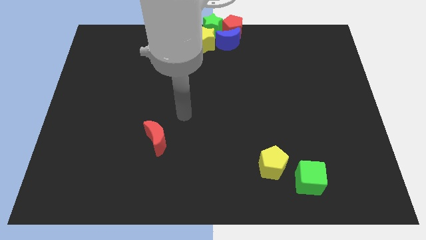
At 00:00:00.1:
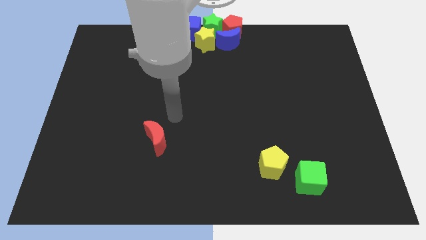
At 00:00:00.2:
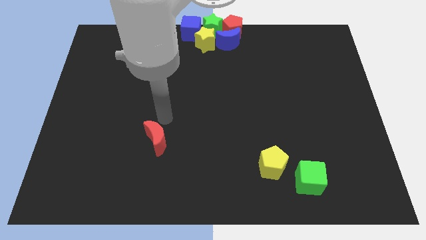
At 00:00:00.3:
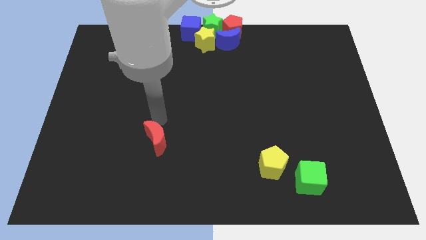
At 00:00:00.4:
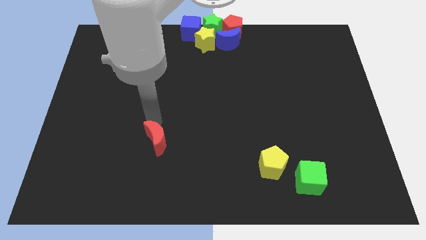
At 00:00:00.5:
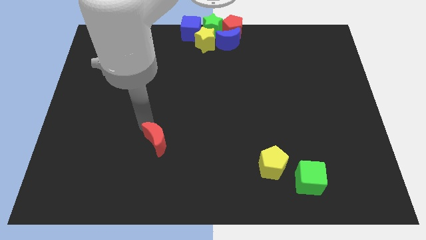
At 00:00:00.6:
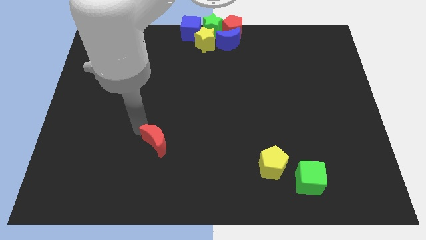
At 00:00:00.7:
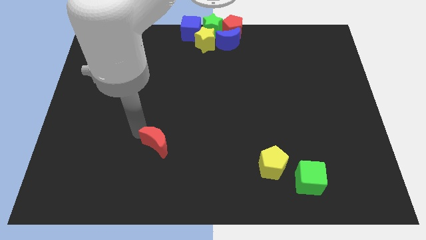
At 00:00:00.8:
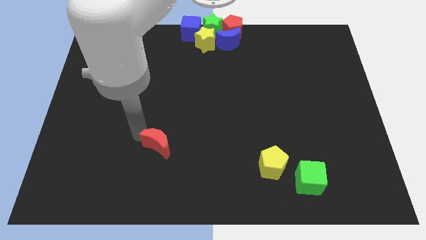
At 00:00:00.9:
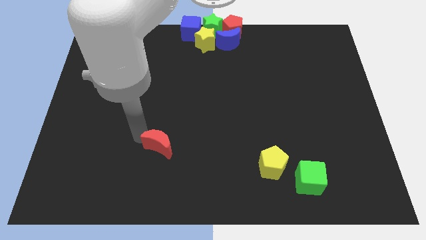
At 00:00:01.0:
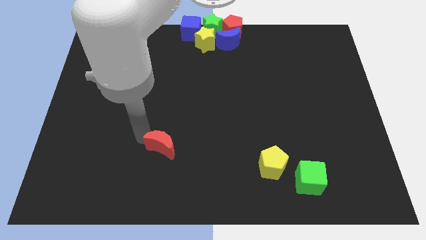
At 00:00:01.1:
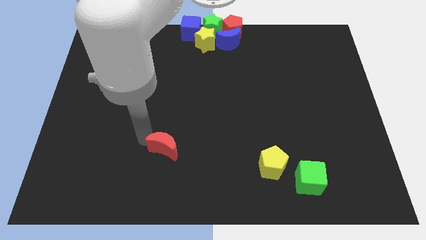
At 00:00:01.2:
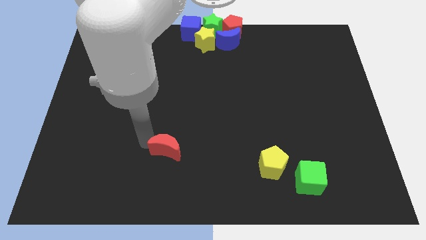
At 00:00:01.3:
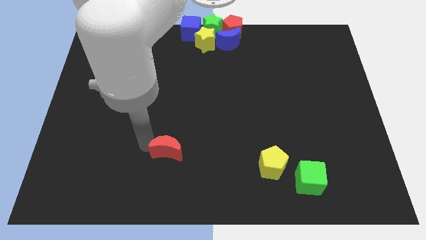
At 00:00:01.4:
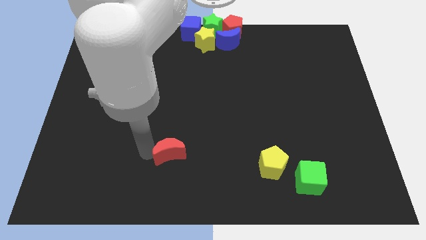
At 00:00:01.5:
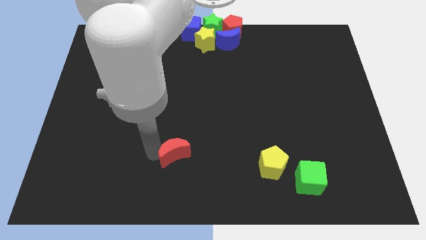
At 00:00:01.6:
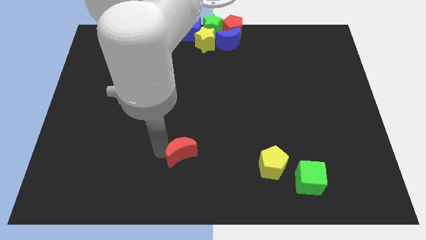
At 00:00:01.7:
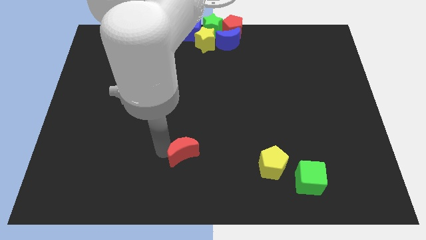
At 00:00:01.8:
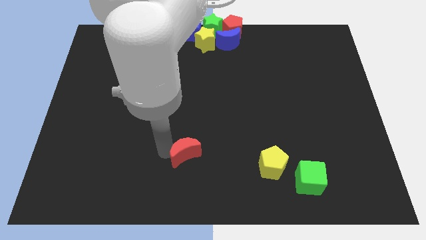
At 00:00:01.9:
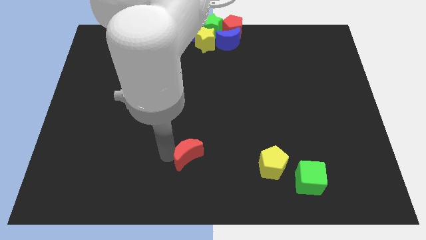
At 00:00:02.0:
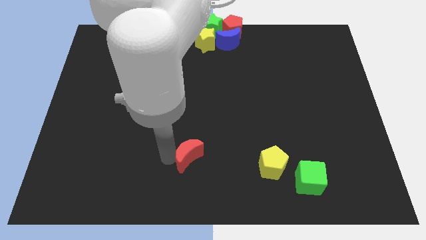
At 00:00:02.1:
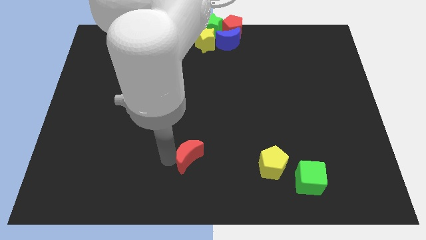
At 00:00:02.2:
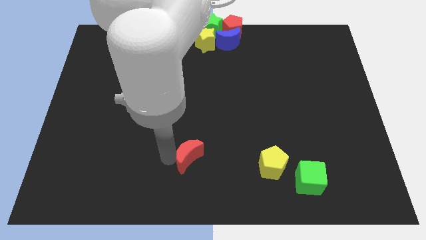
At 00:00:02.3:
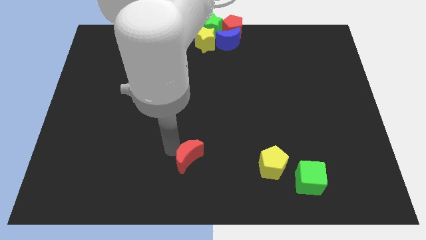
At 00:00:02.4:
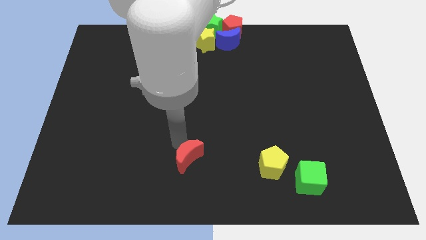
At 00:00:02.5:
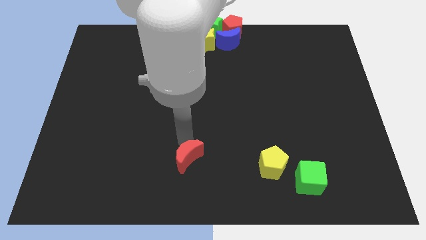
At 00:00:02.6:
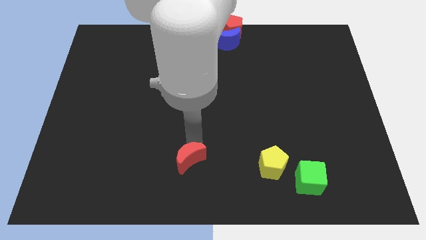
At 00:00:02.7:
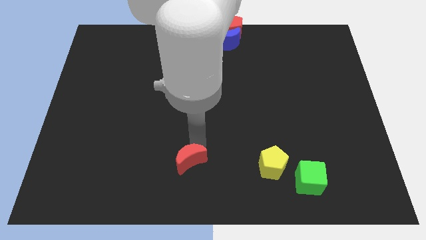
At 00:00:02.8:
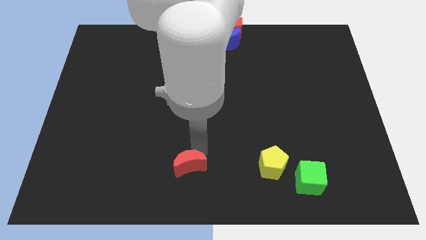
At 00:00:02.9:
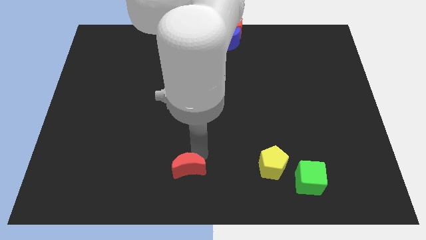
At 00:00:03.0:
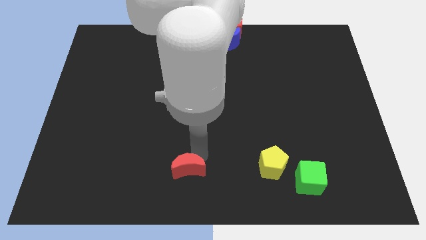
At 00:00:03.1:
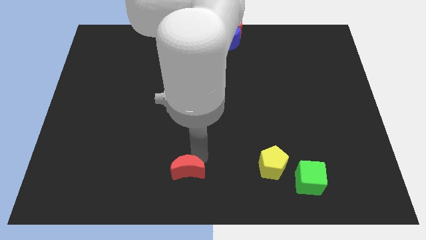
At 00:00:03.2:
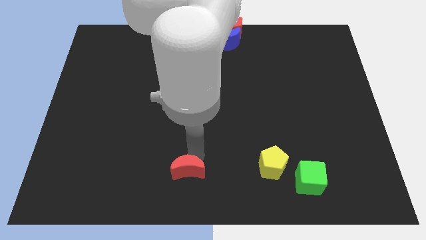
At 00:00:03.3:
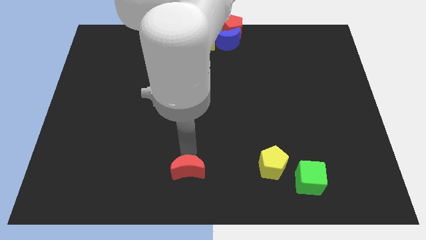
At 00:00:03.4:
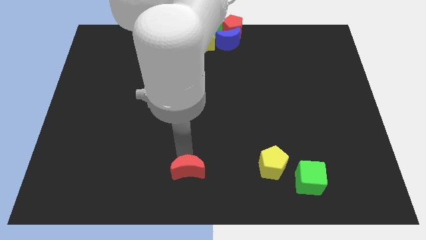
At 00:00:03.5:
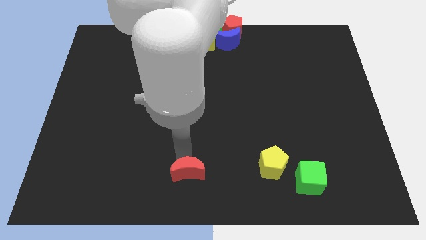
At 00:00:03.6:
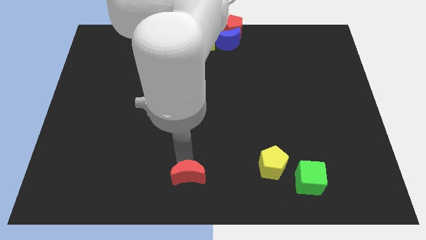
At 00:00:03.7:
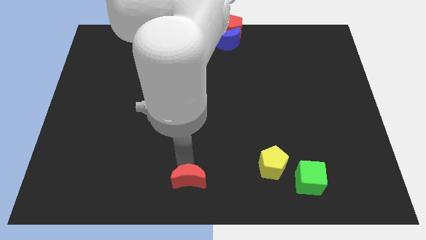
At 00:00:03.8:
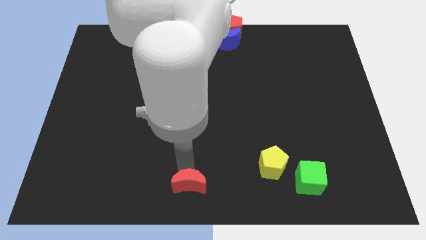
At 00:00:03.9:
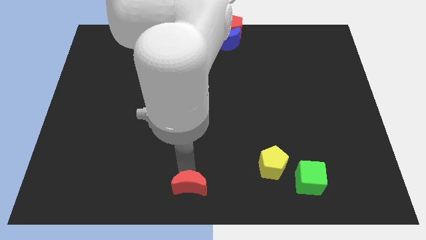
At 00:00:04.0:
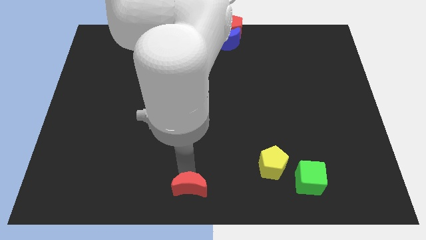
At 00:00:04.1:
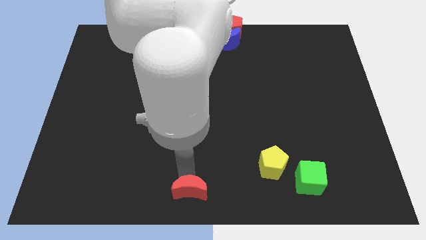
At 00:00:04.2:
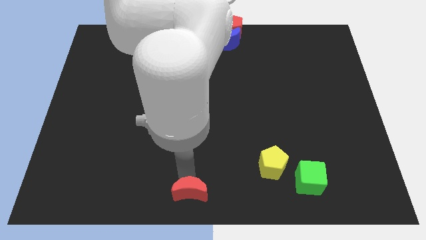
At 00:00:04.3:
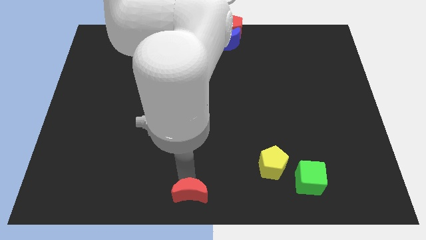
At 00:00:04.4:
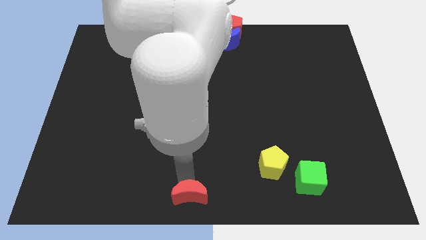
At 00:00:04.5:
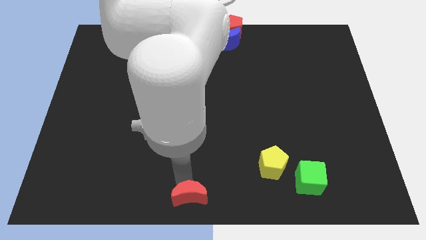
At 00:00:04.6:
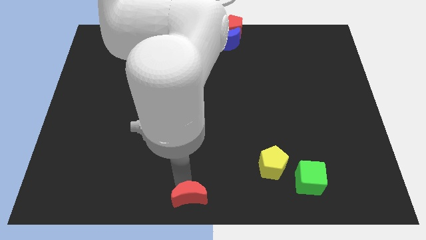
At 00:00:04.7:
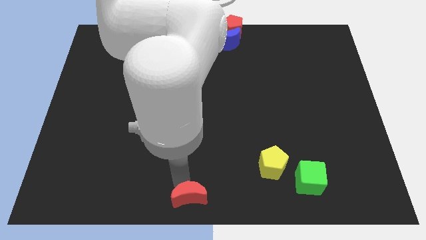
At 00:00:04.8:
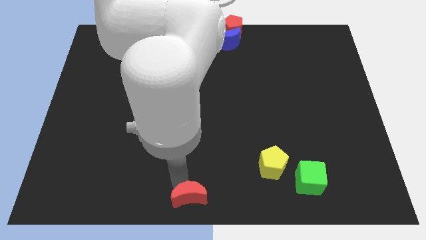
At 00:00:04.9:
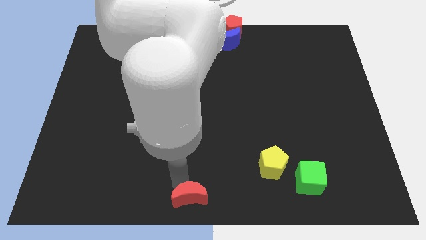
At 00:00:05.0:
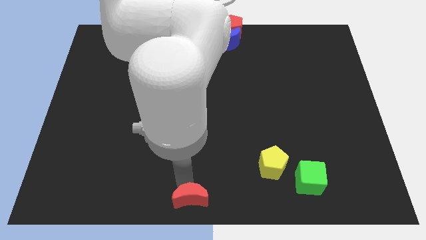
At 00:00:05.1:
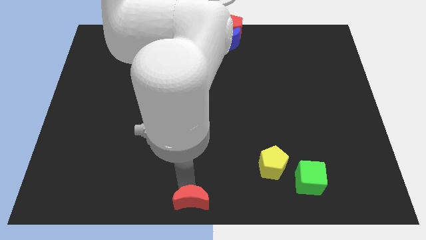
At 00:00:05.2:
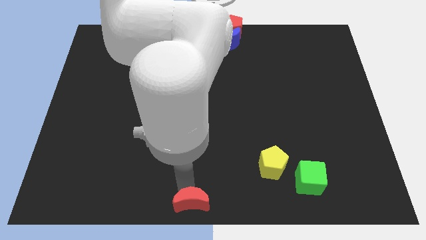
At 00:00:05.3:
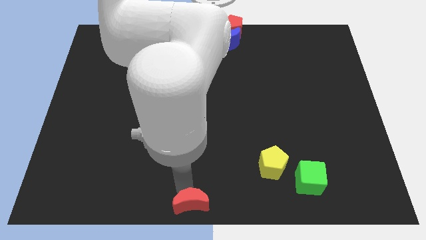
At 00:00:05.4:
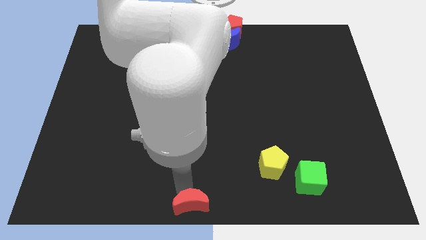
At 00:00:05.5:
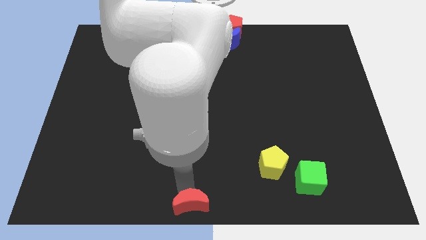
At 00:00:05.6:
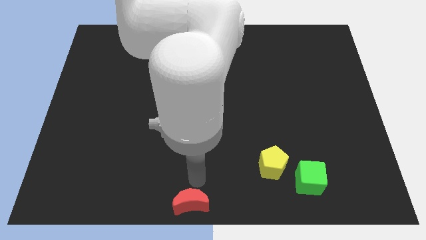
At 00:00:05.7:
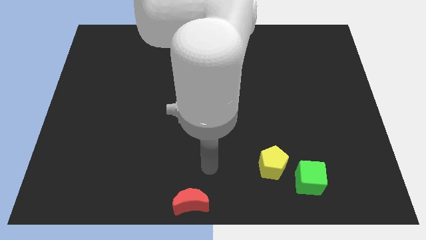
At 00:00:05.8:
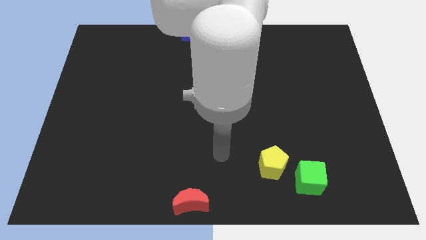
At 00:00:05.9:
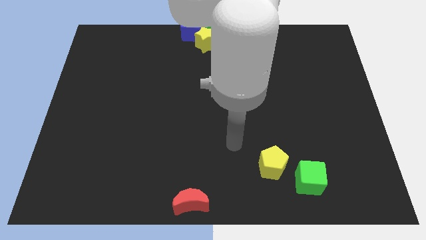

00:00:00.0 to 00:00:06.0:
push red crescent towards bottom center of the board

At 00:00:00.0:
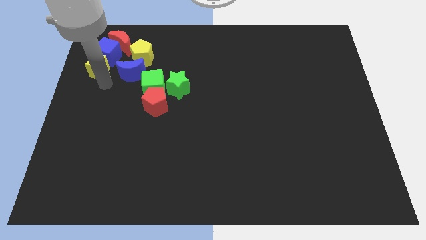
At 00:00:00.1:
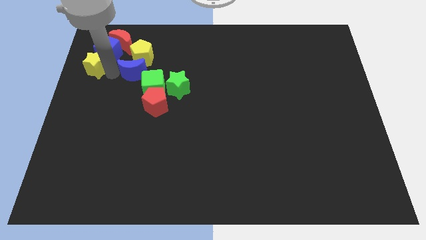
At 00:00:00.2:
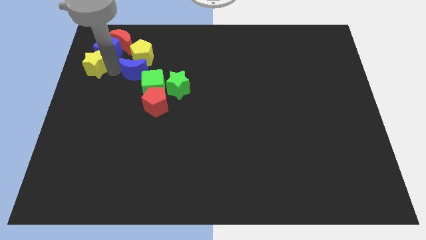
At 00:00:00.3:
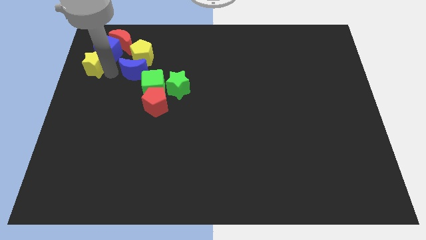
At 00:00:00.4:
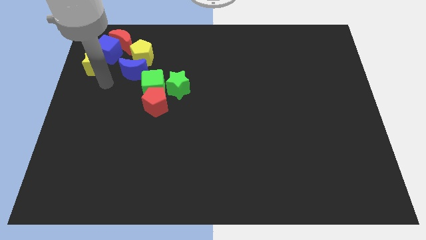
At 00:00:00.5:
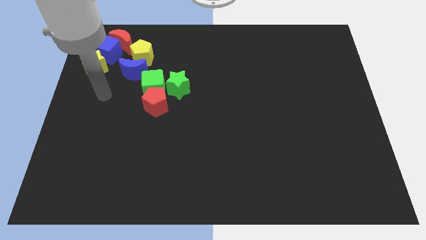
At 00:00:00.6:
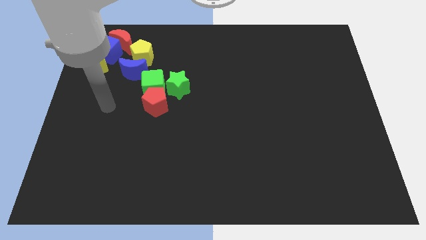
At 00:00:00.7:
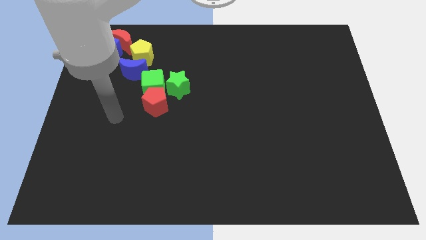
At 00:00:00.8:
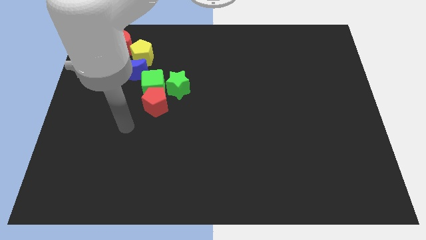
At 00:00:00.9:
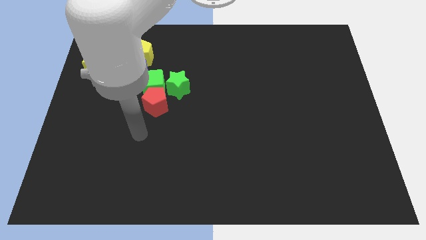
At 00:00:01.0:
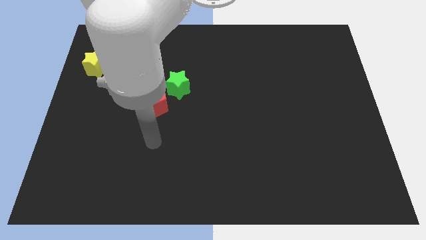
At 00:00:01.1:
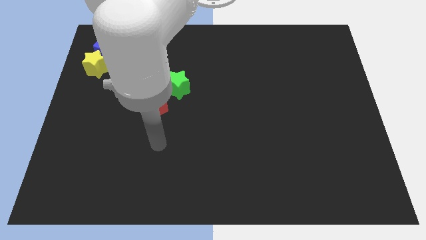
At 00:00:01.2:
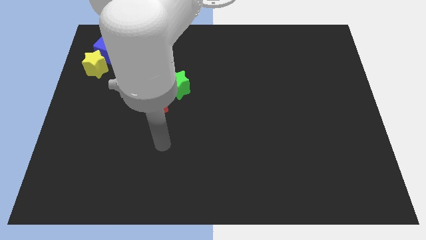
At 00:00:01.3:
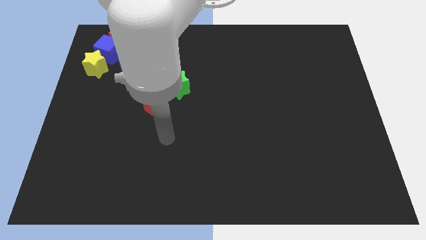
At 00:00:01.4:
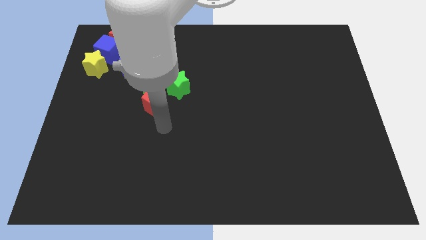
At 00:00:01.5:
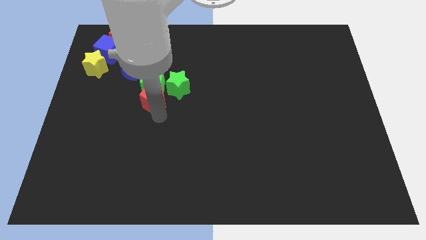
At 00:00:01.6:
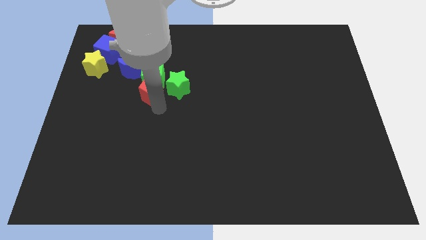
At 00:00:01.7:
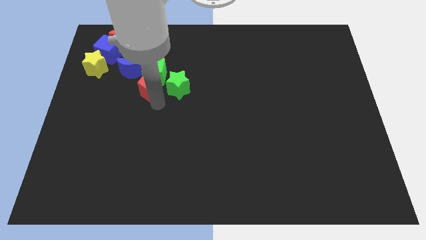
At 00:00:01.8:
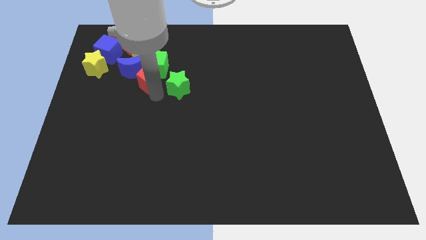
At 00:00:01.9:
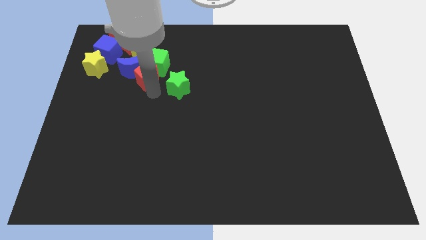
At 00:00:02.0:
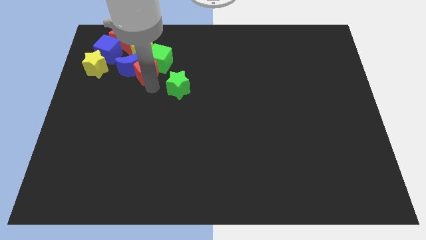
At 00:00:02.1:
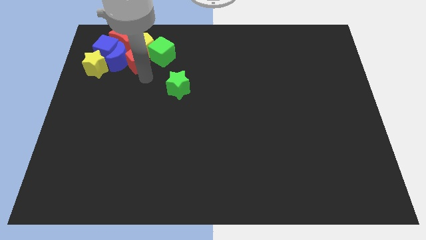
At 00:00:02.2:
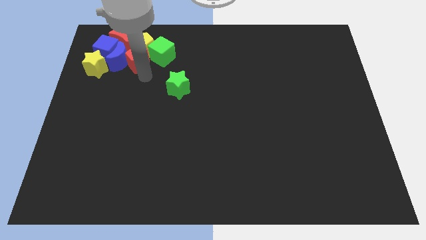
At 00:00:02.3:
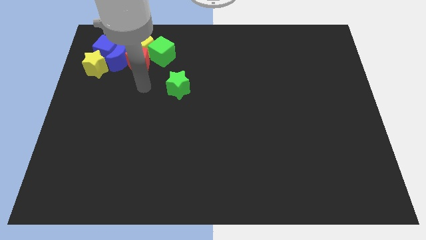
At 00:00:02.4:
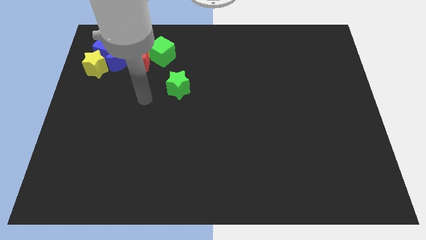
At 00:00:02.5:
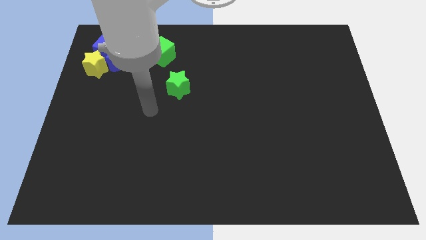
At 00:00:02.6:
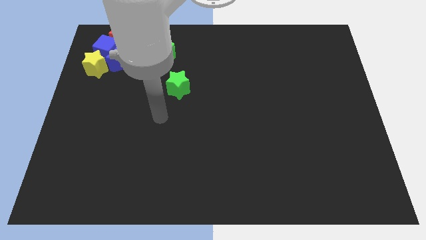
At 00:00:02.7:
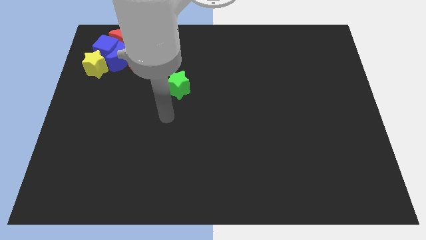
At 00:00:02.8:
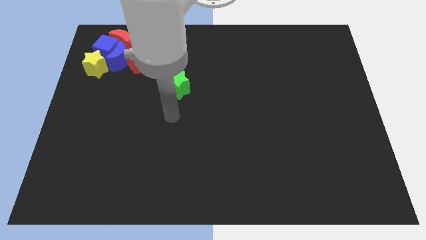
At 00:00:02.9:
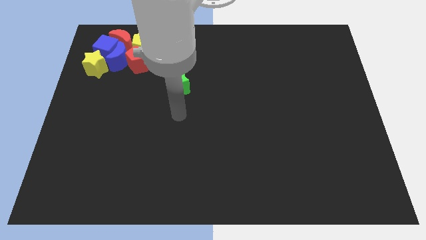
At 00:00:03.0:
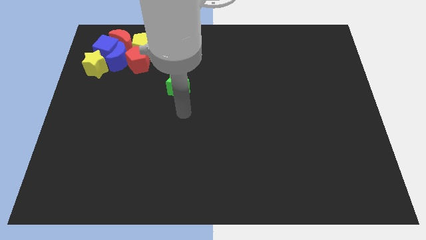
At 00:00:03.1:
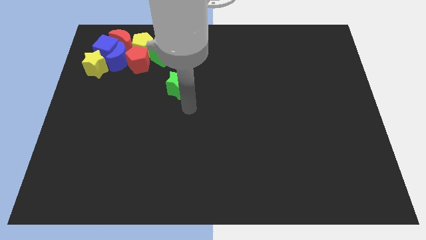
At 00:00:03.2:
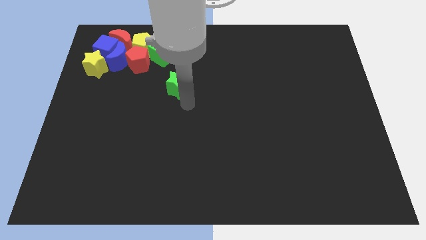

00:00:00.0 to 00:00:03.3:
push the red pentagon into the yellow pentagon
